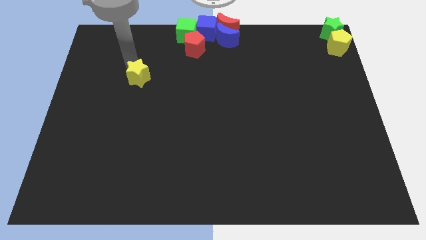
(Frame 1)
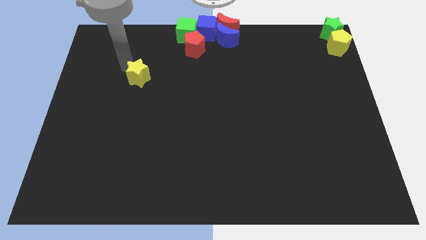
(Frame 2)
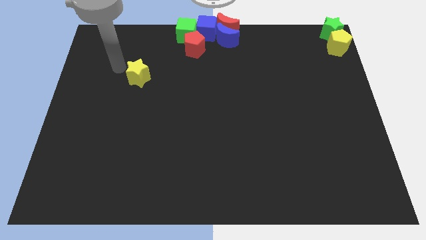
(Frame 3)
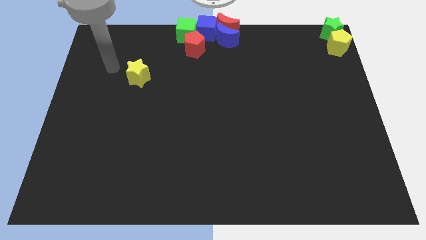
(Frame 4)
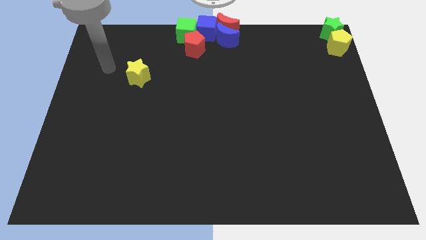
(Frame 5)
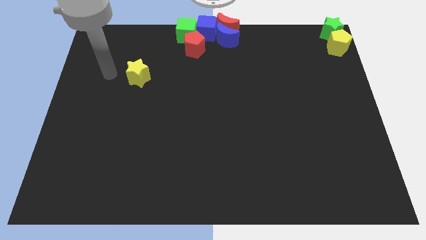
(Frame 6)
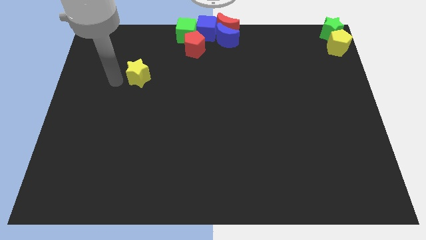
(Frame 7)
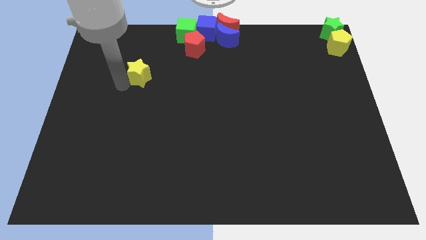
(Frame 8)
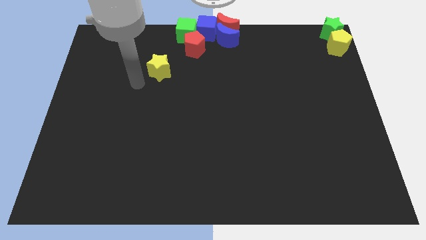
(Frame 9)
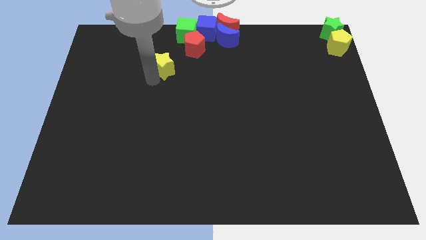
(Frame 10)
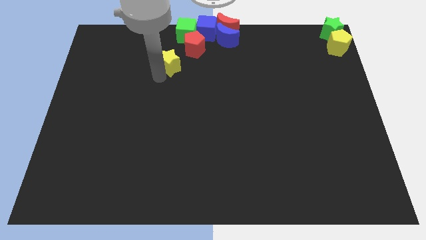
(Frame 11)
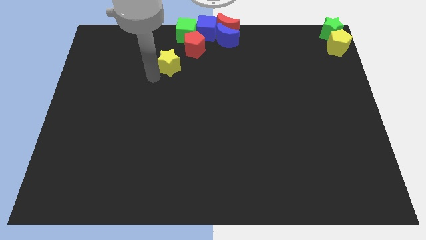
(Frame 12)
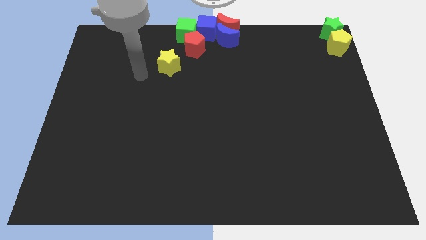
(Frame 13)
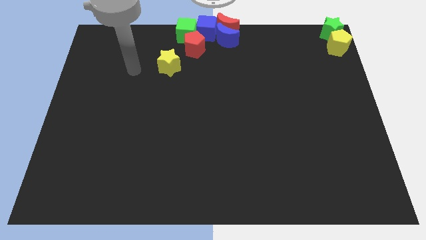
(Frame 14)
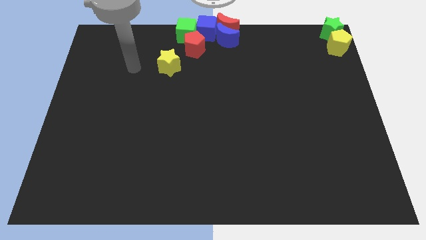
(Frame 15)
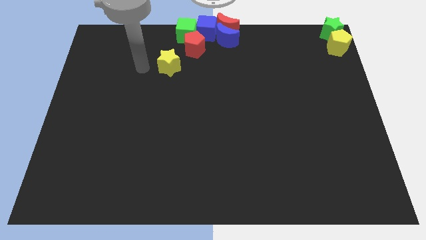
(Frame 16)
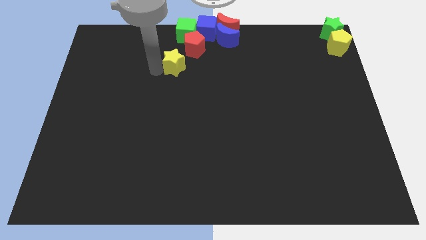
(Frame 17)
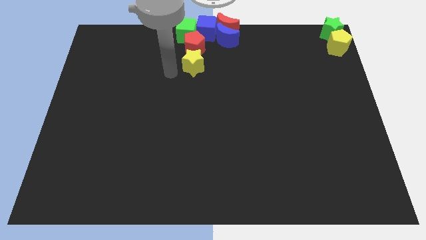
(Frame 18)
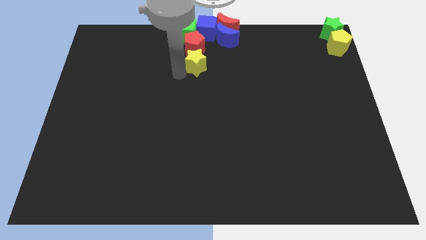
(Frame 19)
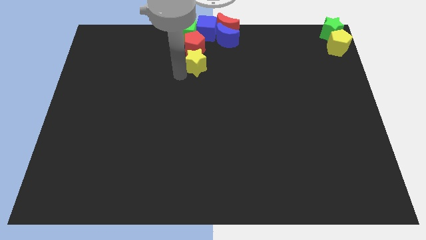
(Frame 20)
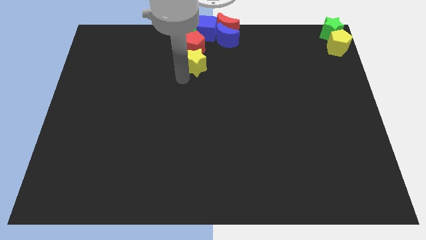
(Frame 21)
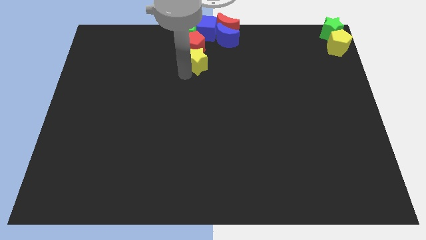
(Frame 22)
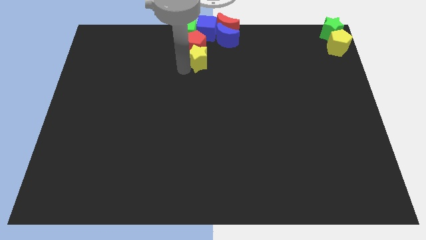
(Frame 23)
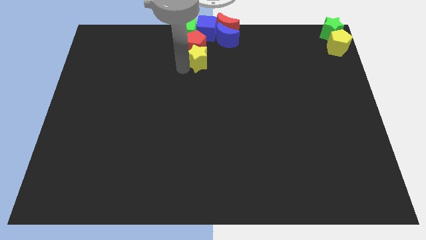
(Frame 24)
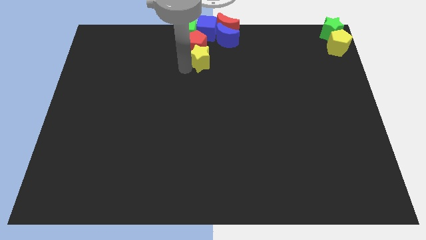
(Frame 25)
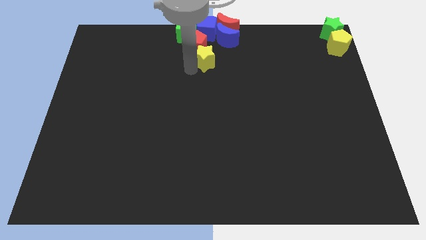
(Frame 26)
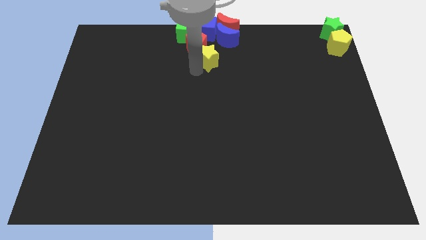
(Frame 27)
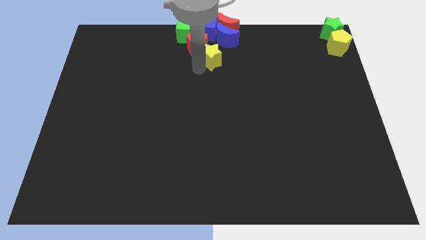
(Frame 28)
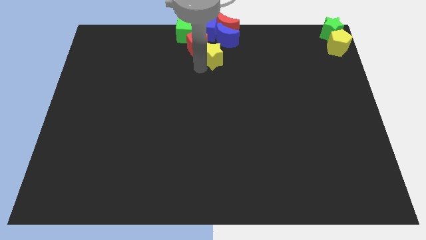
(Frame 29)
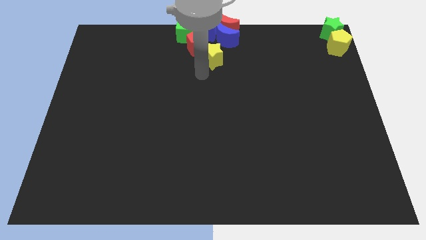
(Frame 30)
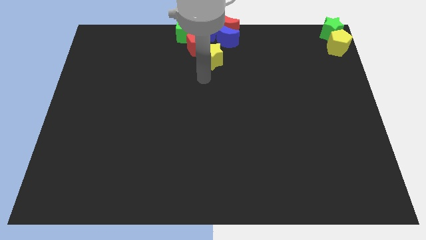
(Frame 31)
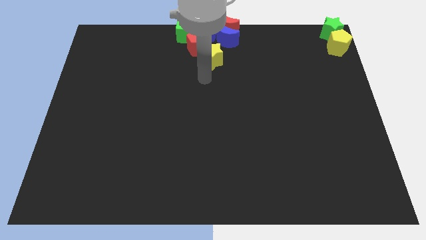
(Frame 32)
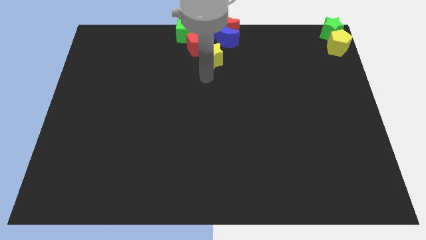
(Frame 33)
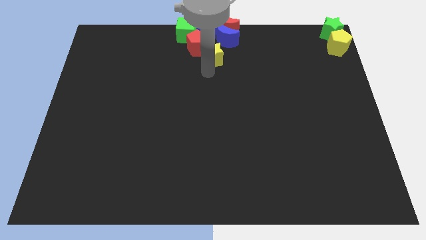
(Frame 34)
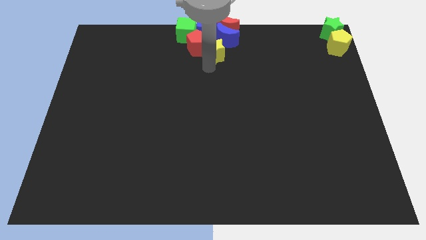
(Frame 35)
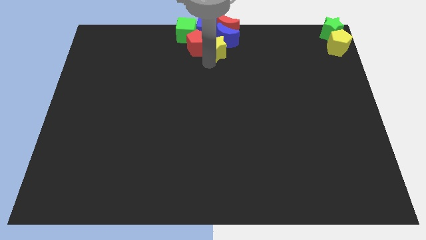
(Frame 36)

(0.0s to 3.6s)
place the yellow star right to the red pentagon

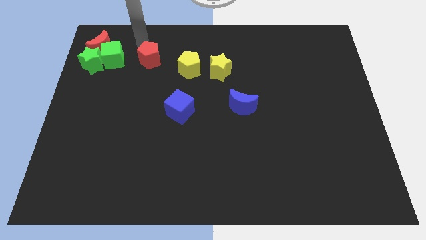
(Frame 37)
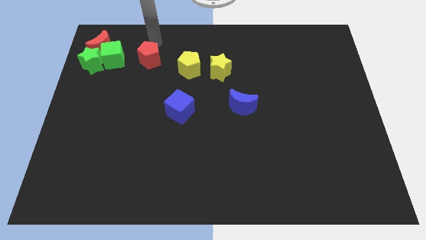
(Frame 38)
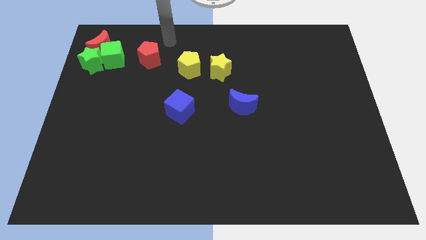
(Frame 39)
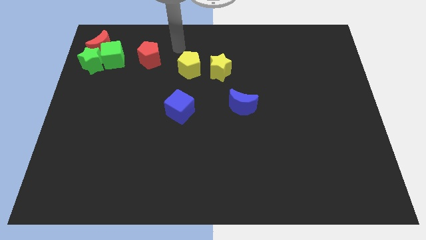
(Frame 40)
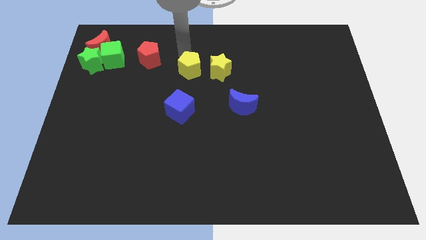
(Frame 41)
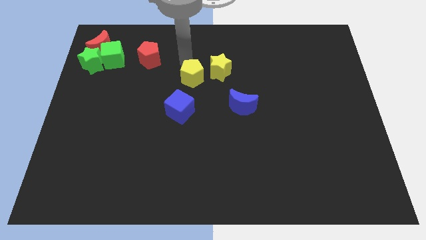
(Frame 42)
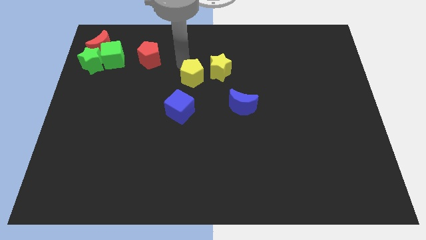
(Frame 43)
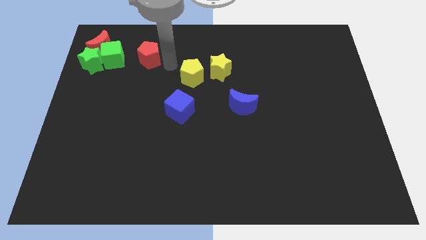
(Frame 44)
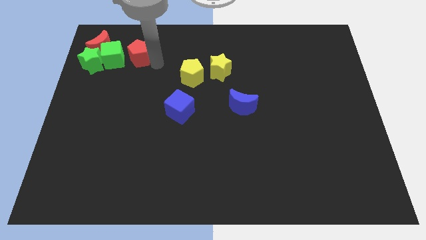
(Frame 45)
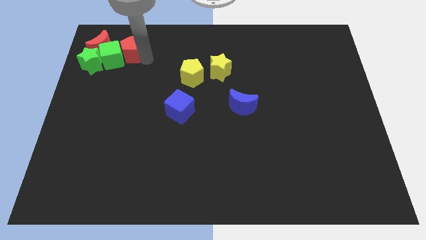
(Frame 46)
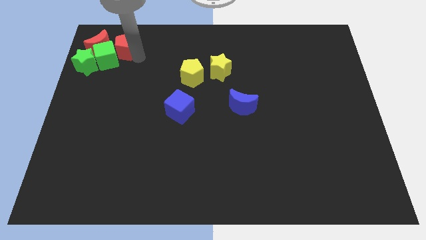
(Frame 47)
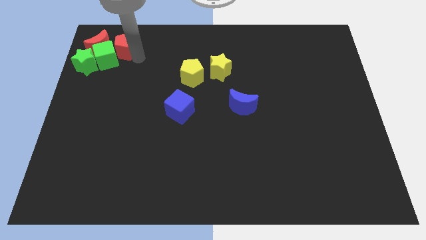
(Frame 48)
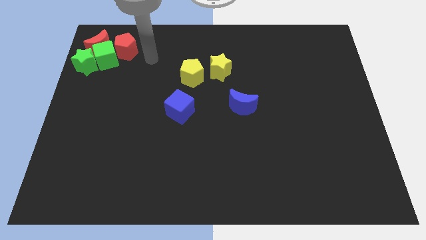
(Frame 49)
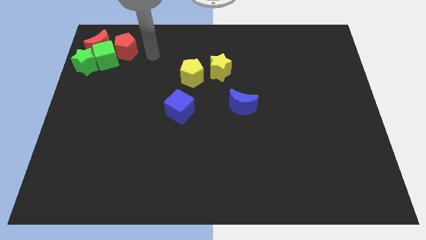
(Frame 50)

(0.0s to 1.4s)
push red pentagon into the green cube

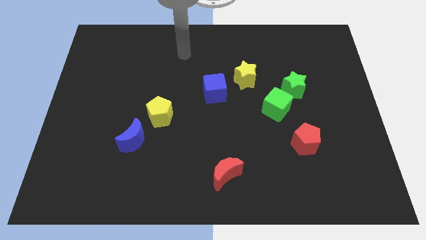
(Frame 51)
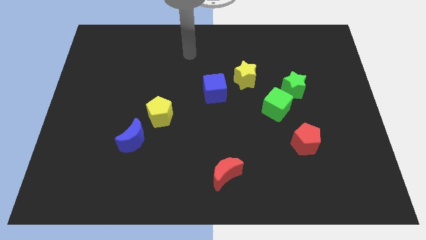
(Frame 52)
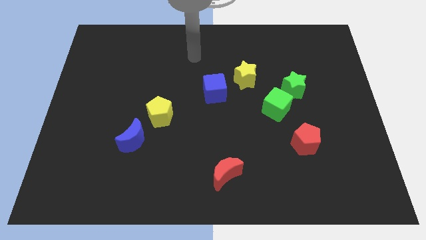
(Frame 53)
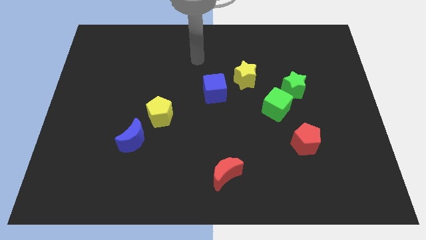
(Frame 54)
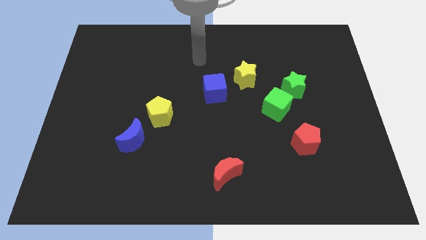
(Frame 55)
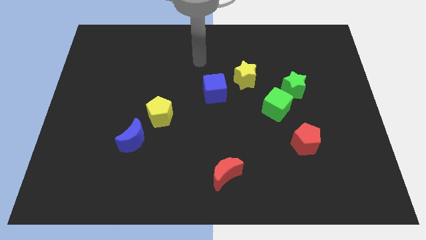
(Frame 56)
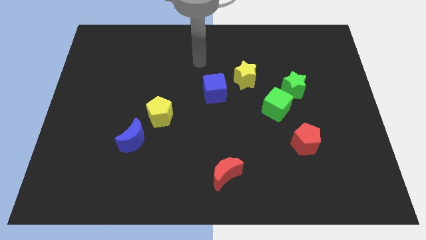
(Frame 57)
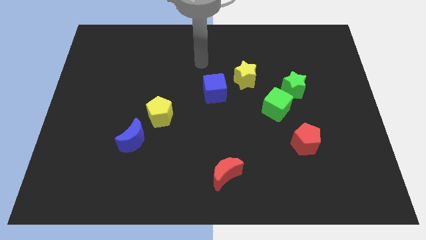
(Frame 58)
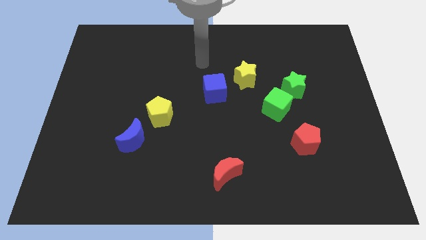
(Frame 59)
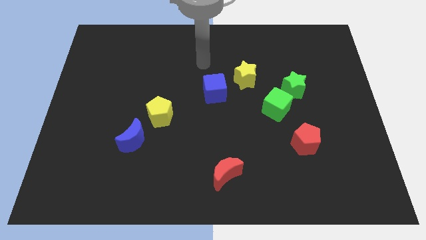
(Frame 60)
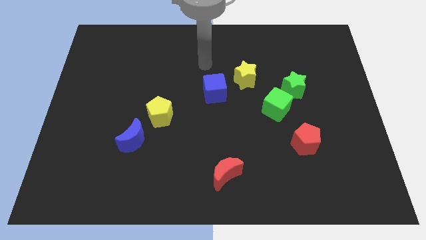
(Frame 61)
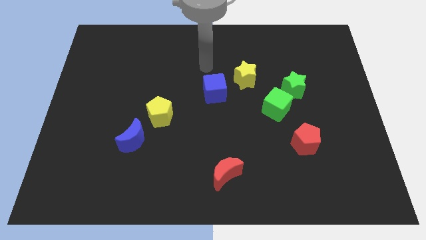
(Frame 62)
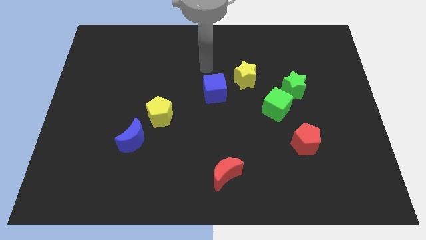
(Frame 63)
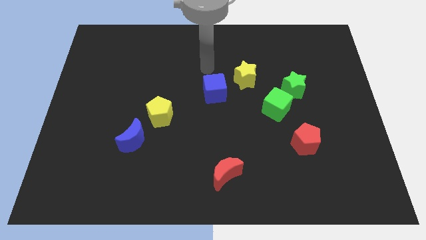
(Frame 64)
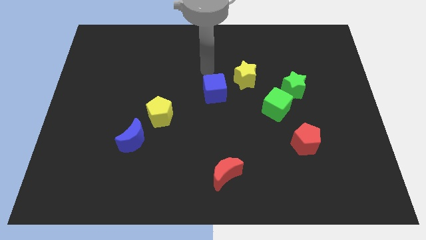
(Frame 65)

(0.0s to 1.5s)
push arm on the top blue cube

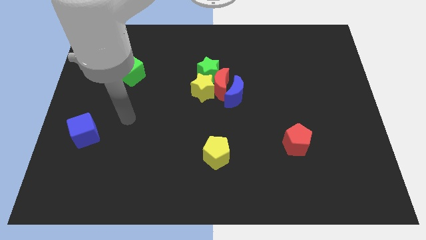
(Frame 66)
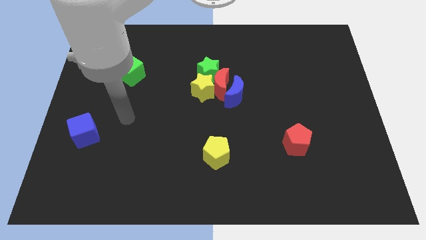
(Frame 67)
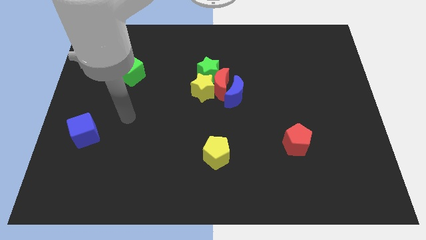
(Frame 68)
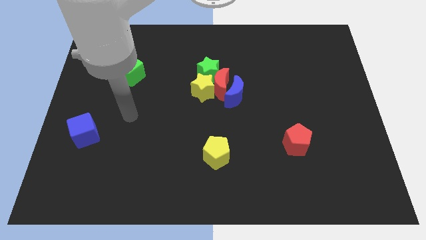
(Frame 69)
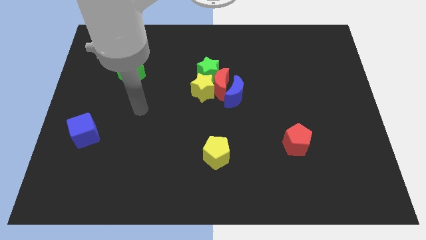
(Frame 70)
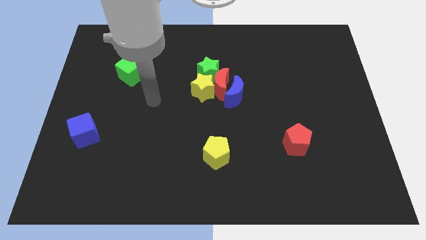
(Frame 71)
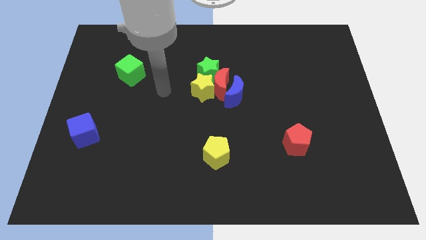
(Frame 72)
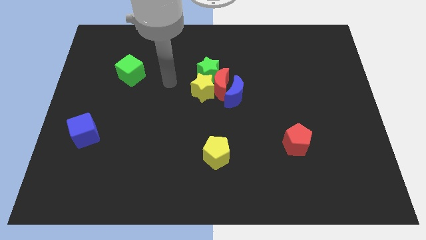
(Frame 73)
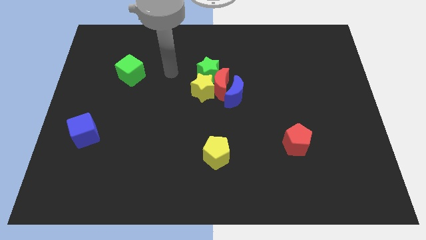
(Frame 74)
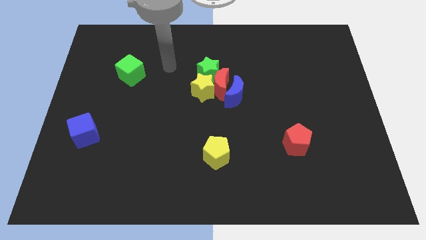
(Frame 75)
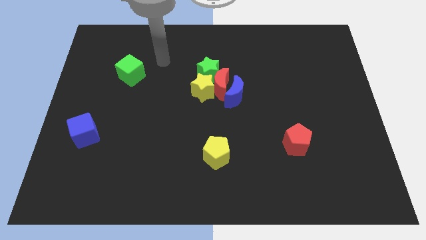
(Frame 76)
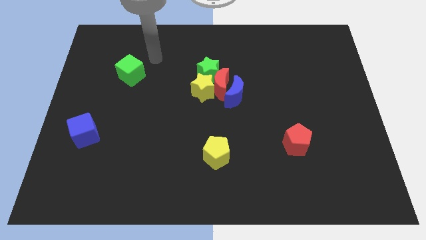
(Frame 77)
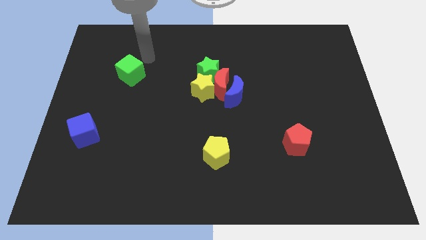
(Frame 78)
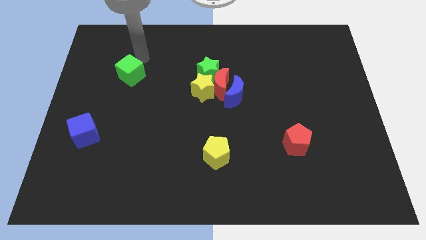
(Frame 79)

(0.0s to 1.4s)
point your arm above green cube

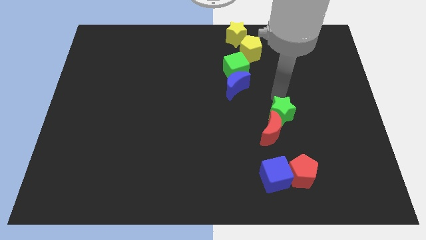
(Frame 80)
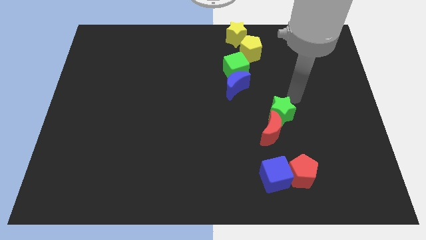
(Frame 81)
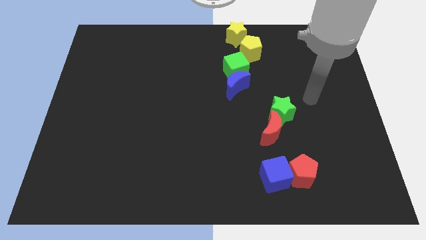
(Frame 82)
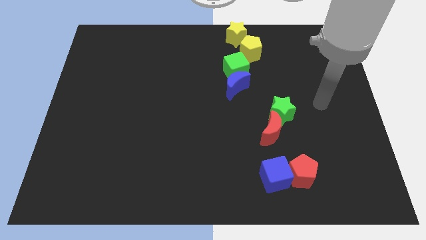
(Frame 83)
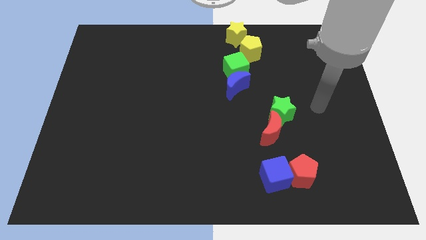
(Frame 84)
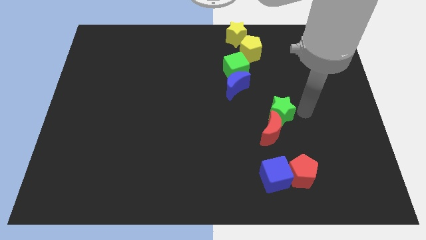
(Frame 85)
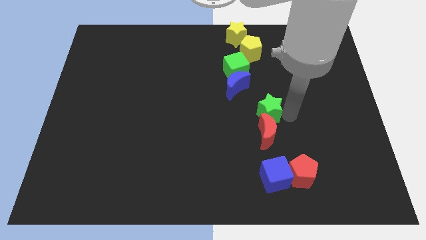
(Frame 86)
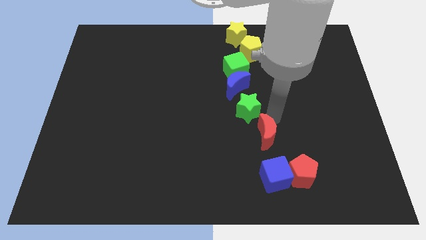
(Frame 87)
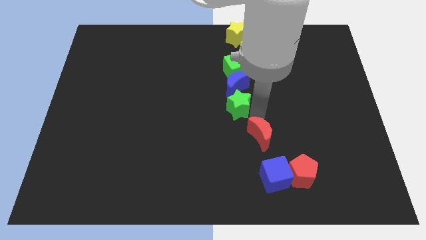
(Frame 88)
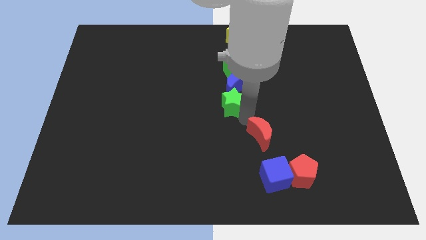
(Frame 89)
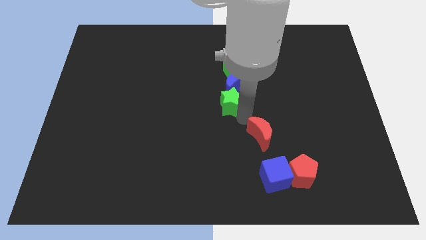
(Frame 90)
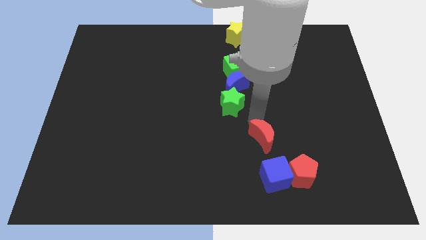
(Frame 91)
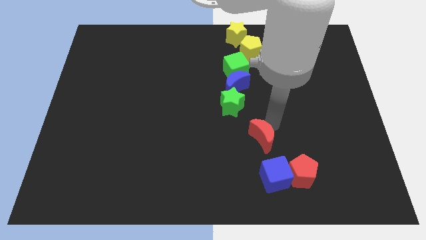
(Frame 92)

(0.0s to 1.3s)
place the green star below the blue moon
